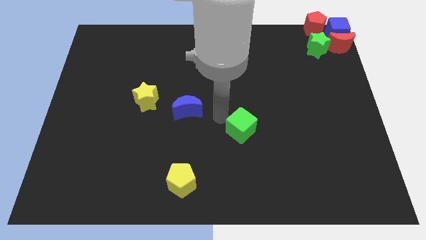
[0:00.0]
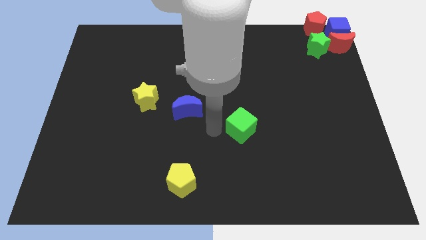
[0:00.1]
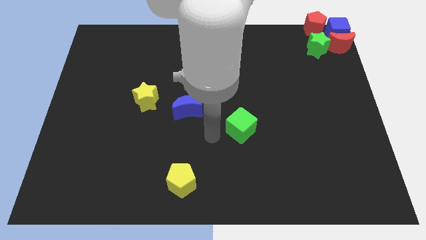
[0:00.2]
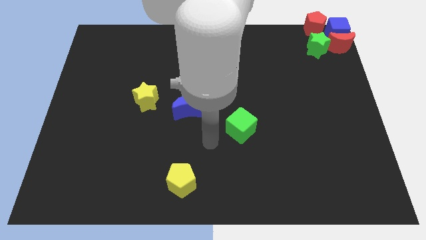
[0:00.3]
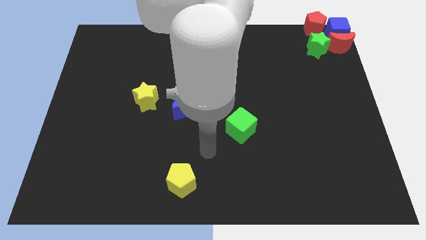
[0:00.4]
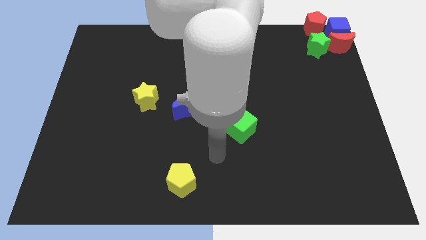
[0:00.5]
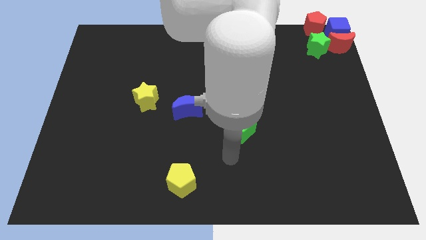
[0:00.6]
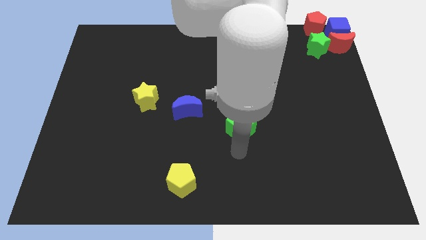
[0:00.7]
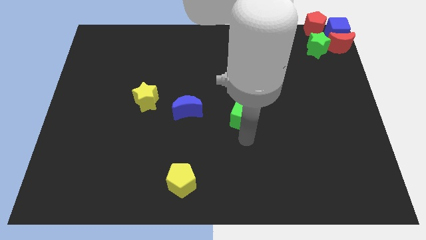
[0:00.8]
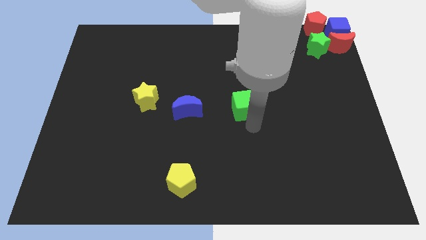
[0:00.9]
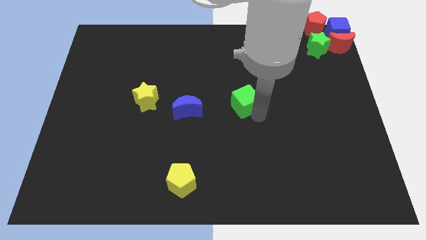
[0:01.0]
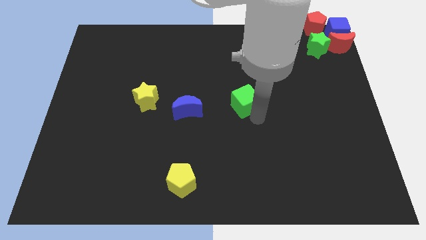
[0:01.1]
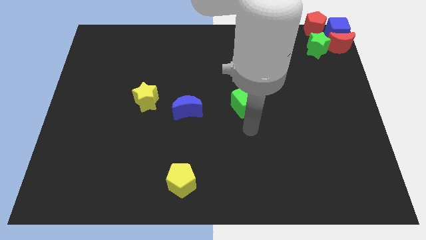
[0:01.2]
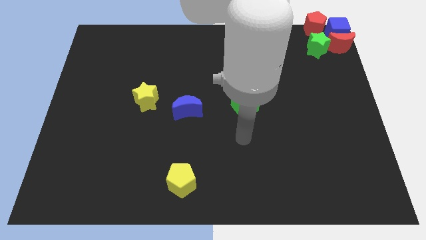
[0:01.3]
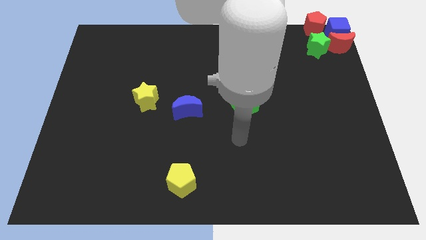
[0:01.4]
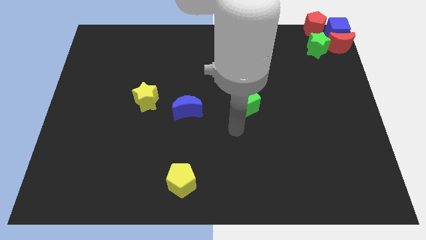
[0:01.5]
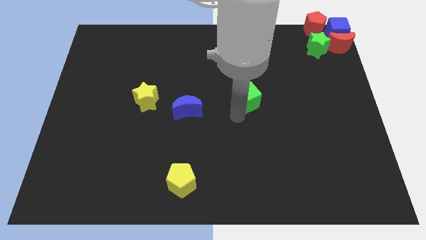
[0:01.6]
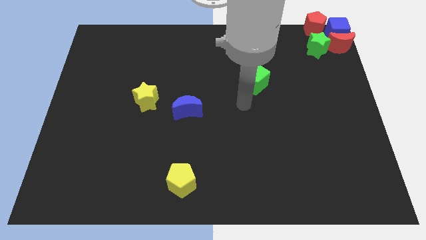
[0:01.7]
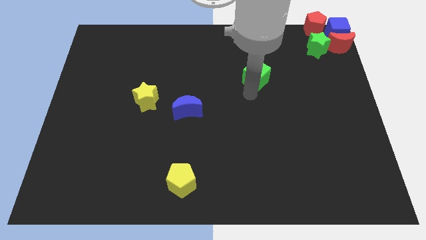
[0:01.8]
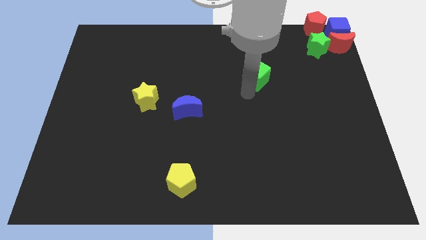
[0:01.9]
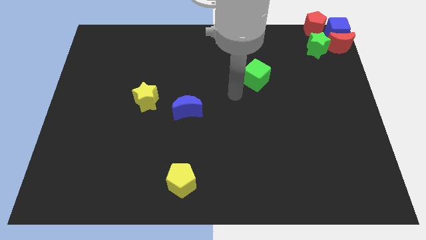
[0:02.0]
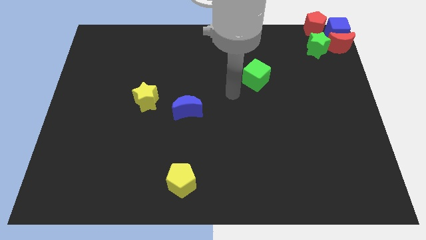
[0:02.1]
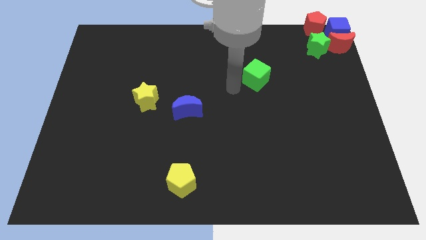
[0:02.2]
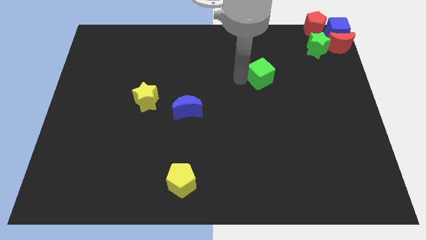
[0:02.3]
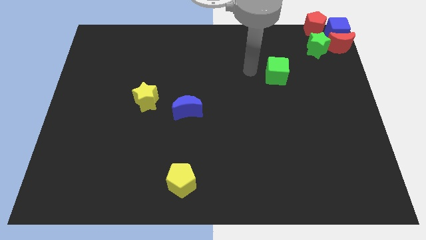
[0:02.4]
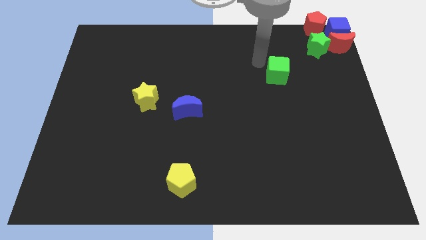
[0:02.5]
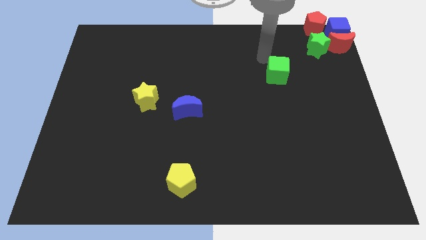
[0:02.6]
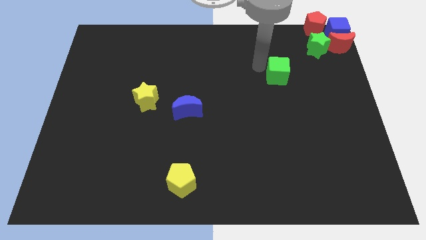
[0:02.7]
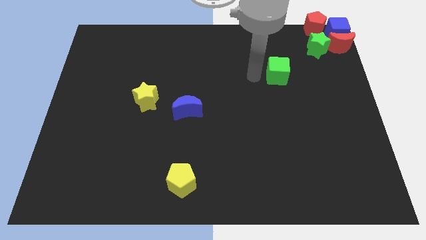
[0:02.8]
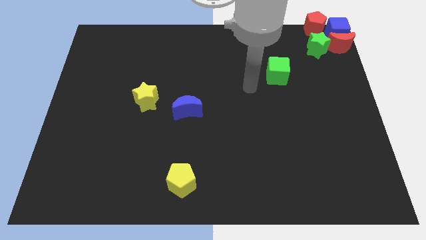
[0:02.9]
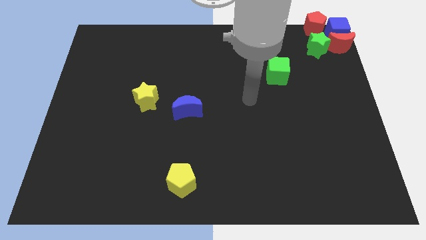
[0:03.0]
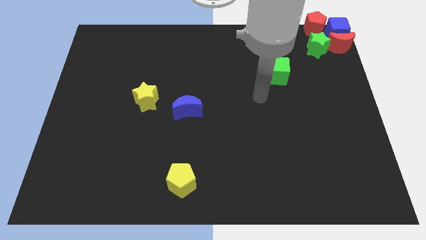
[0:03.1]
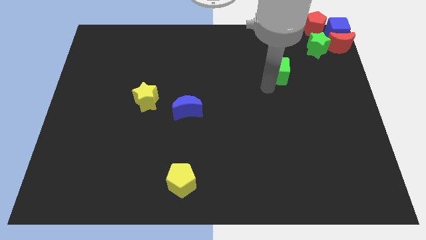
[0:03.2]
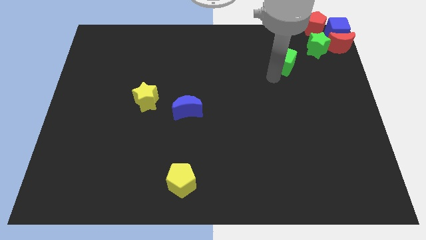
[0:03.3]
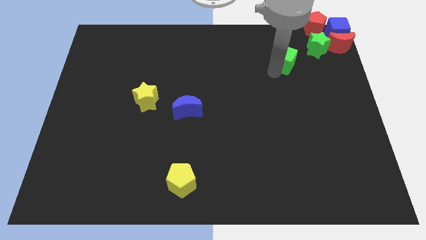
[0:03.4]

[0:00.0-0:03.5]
move the green cube diagonal below the green star at the right

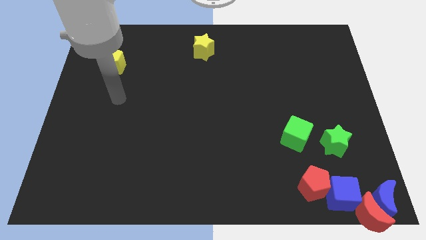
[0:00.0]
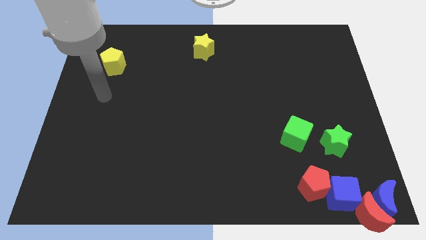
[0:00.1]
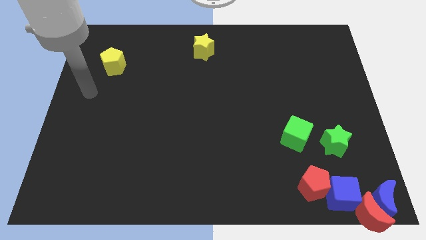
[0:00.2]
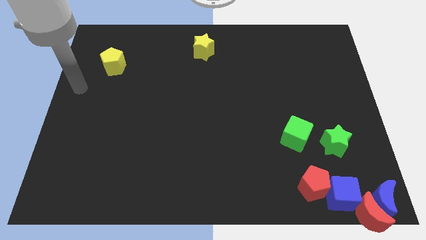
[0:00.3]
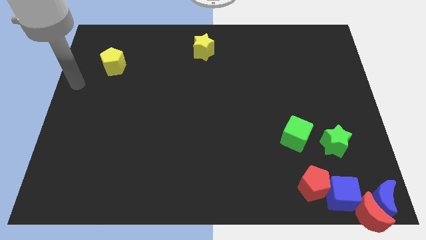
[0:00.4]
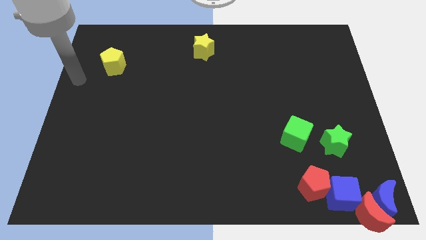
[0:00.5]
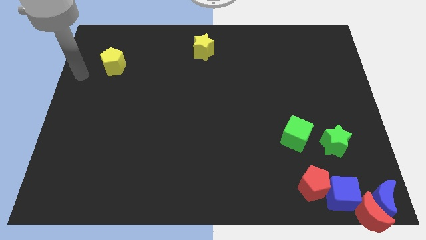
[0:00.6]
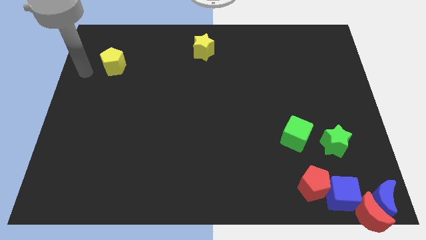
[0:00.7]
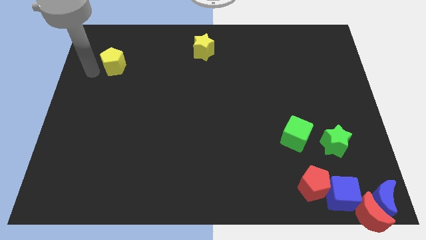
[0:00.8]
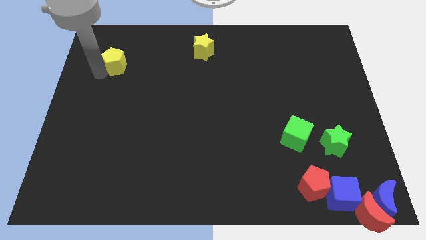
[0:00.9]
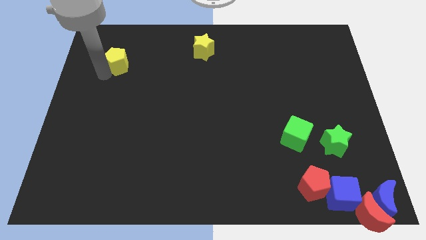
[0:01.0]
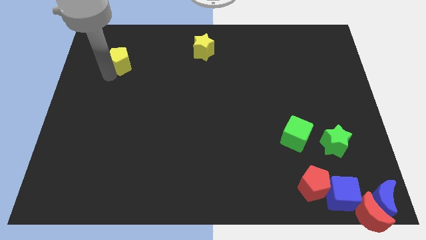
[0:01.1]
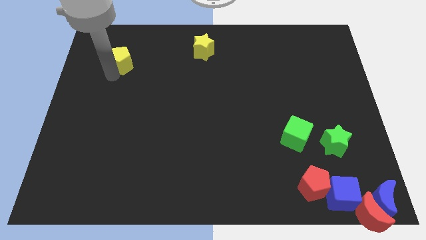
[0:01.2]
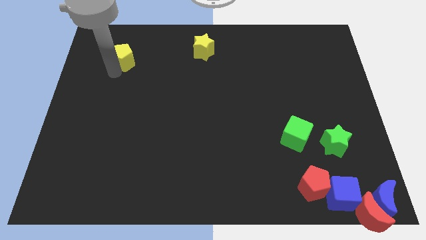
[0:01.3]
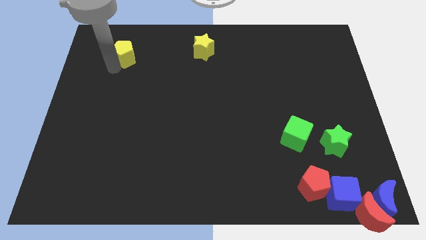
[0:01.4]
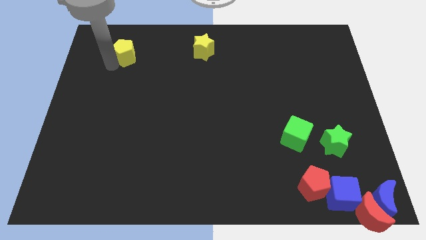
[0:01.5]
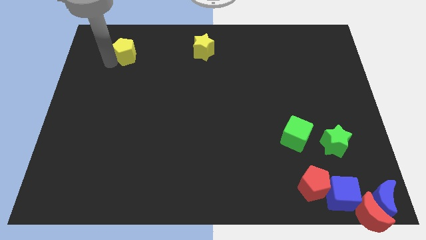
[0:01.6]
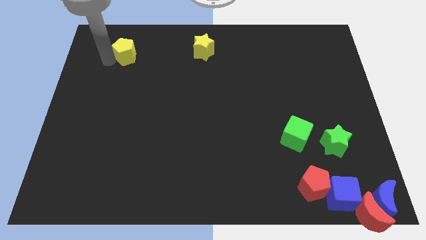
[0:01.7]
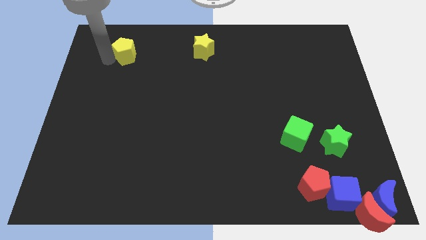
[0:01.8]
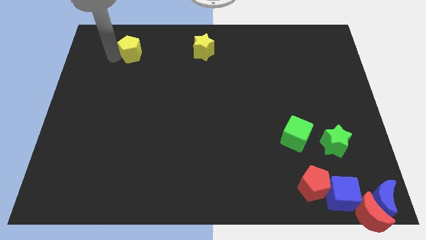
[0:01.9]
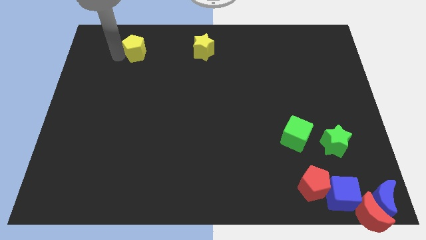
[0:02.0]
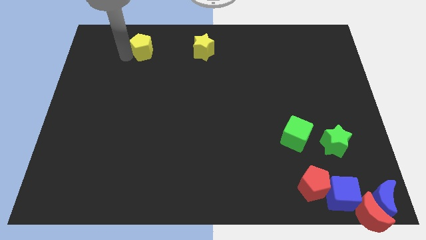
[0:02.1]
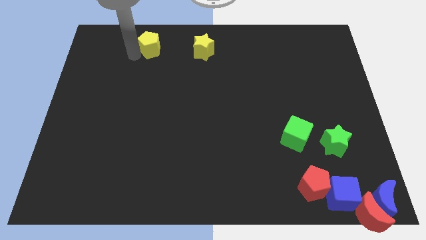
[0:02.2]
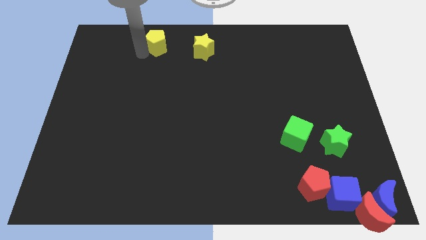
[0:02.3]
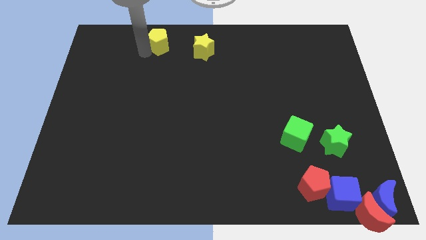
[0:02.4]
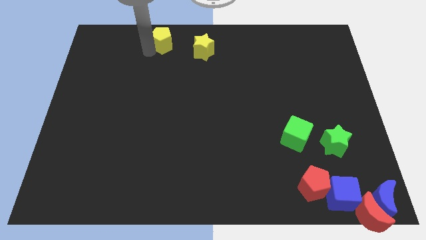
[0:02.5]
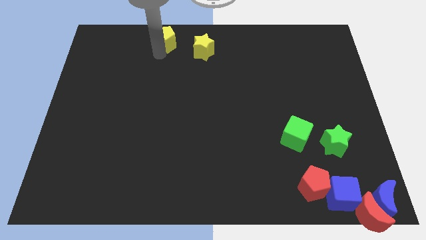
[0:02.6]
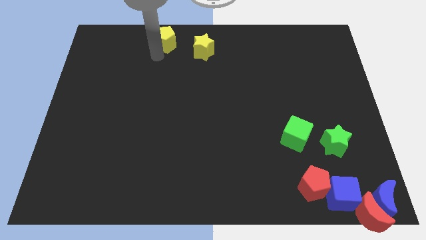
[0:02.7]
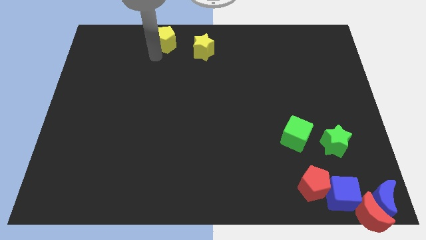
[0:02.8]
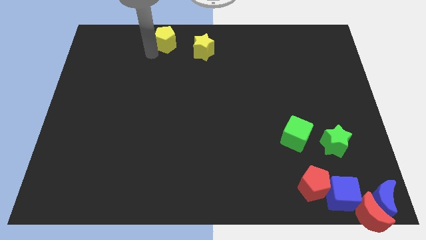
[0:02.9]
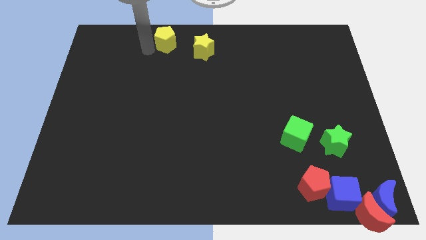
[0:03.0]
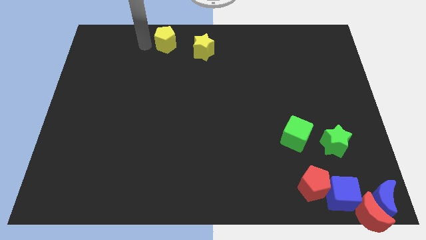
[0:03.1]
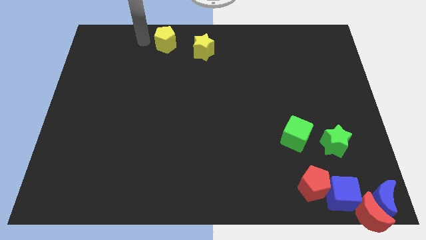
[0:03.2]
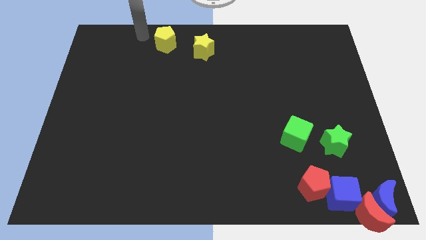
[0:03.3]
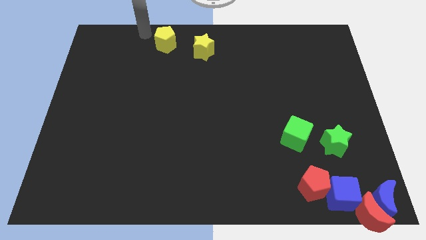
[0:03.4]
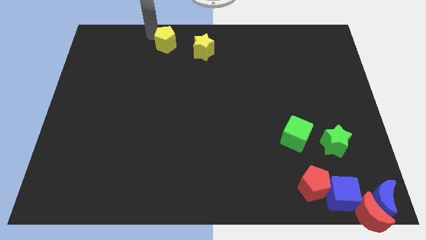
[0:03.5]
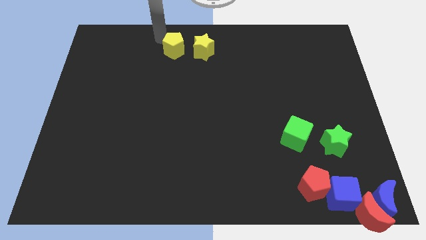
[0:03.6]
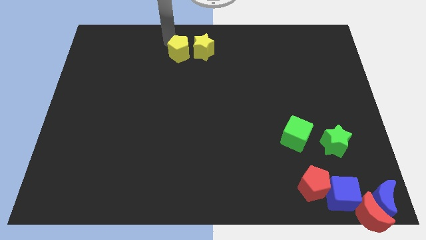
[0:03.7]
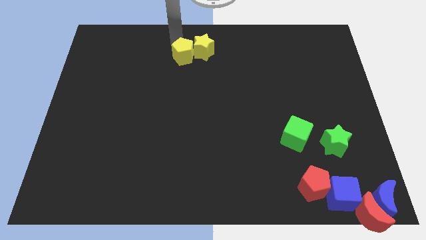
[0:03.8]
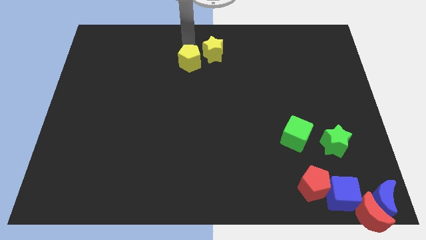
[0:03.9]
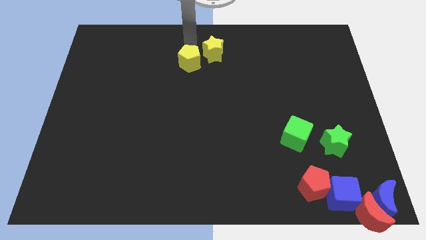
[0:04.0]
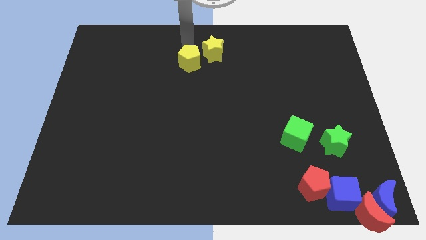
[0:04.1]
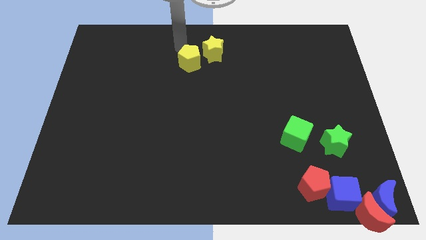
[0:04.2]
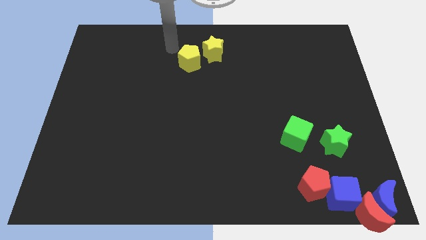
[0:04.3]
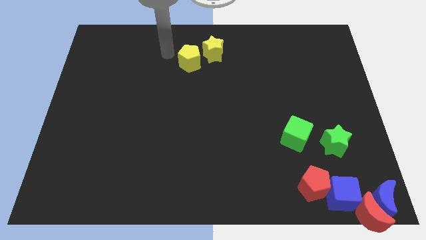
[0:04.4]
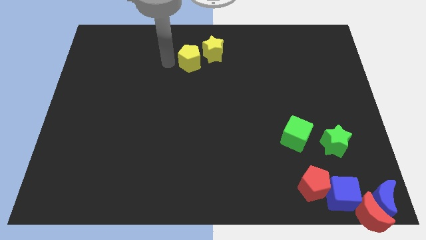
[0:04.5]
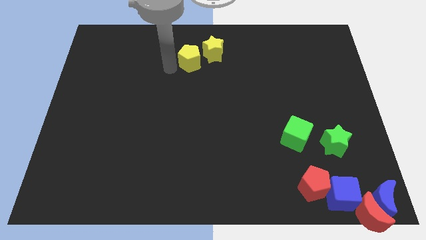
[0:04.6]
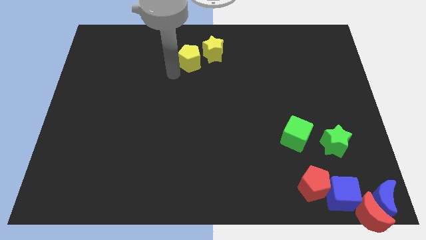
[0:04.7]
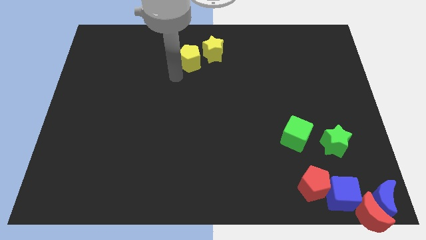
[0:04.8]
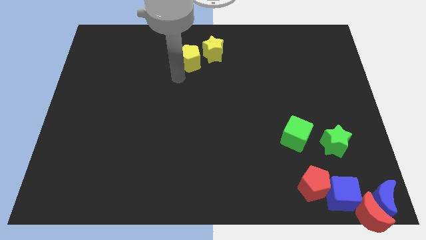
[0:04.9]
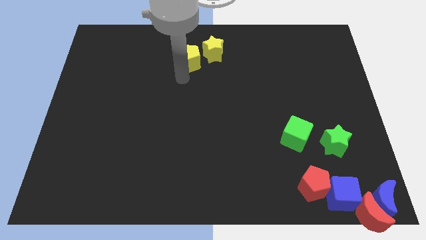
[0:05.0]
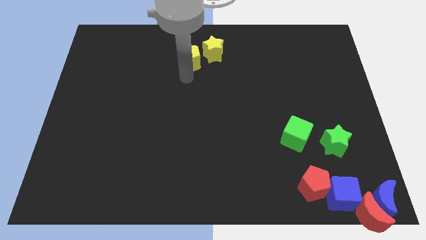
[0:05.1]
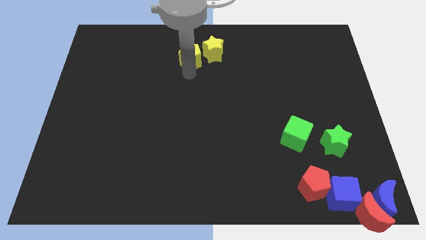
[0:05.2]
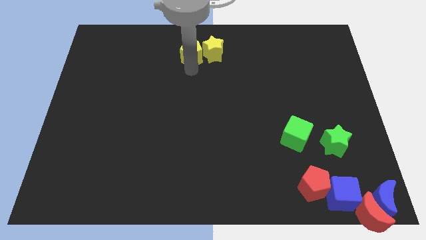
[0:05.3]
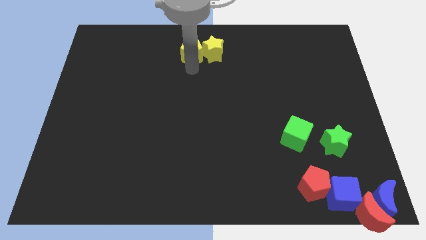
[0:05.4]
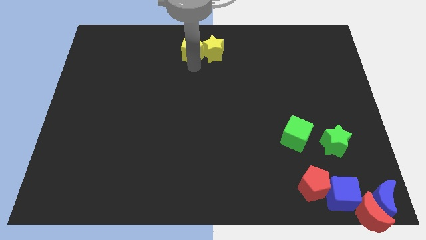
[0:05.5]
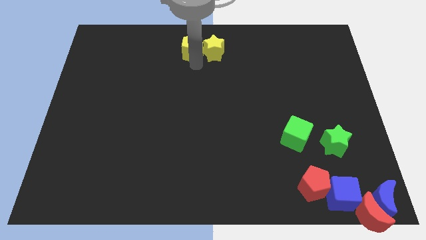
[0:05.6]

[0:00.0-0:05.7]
push the yellow pentagon into the yellow star
